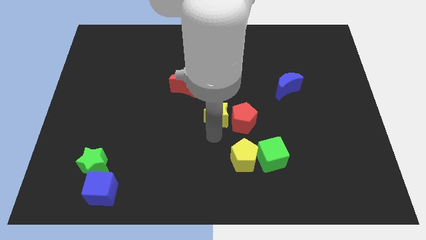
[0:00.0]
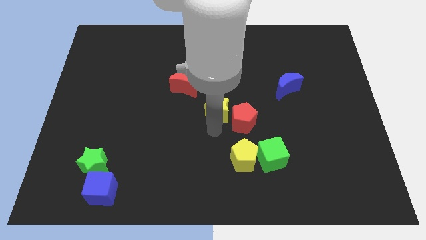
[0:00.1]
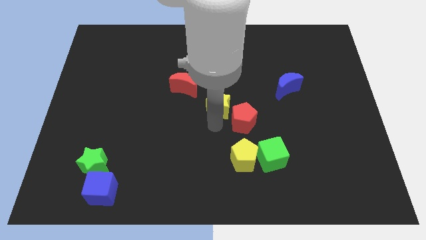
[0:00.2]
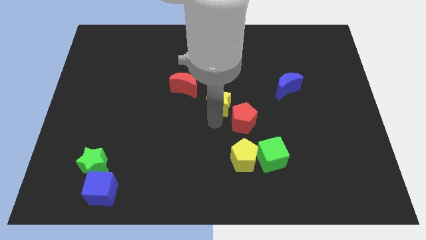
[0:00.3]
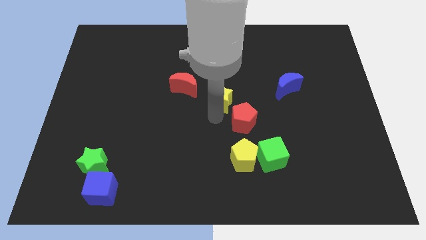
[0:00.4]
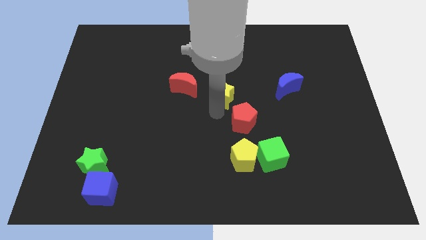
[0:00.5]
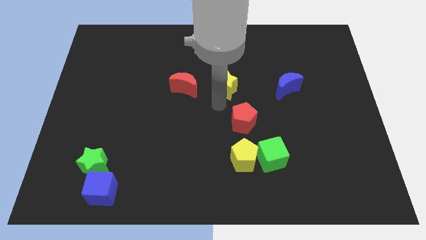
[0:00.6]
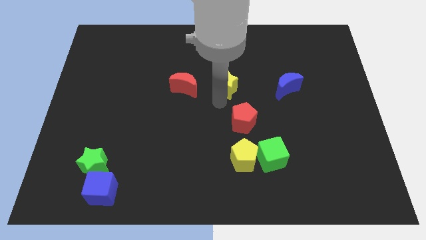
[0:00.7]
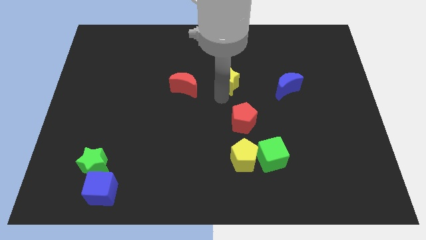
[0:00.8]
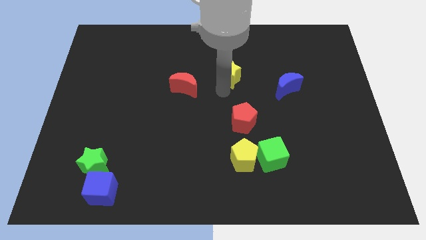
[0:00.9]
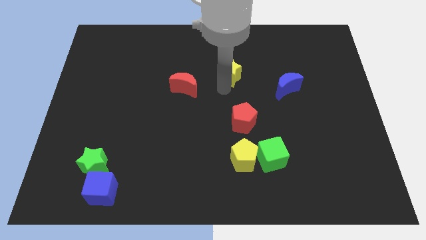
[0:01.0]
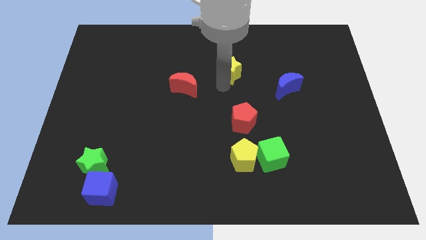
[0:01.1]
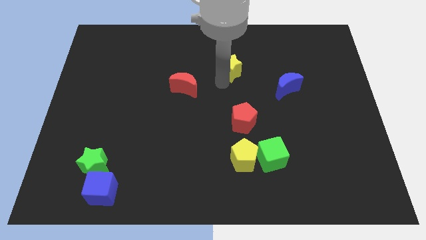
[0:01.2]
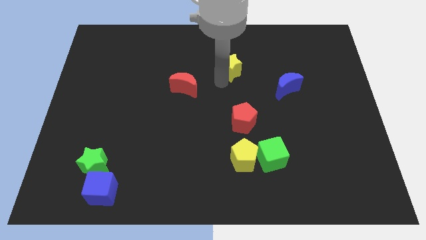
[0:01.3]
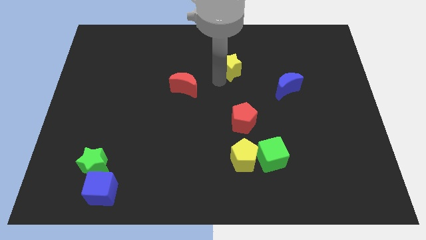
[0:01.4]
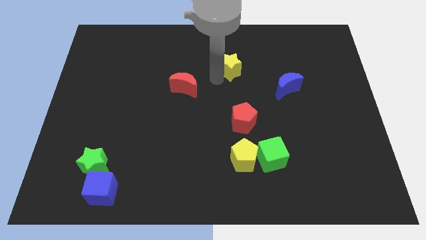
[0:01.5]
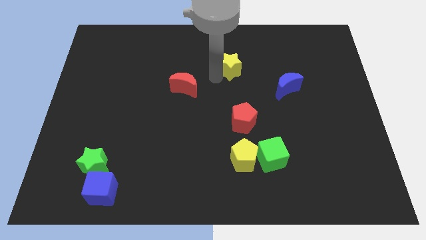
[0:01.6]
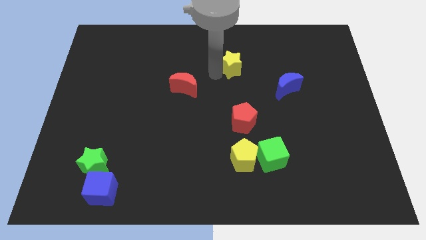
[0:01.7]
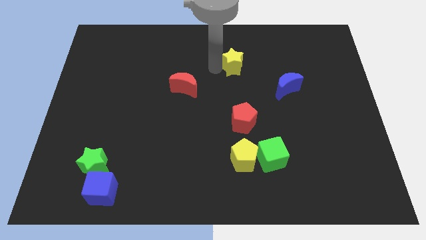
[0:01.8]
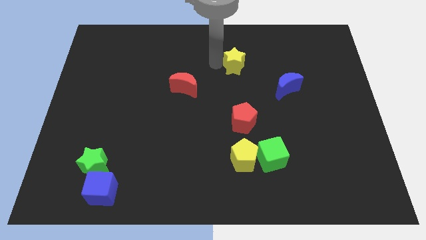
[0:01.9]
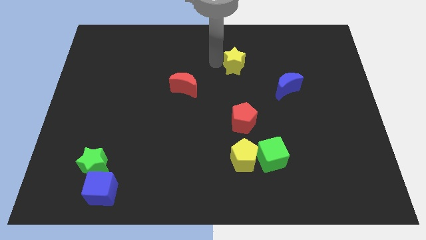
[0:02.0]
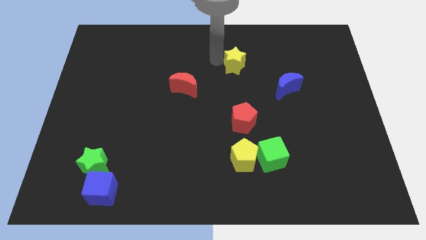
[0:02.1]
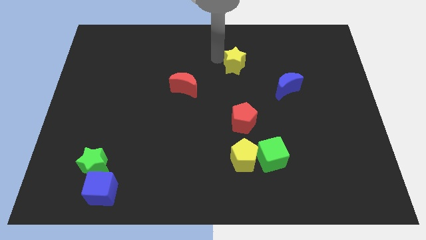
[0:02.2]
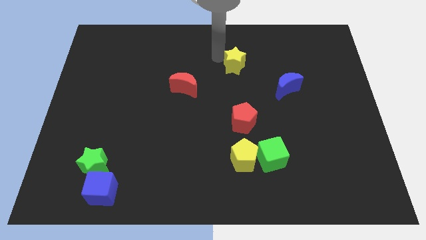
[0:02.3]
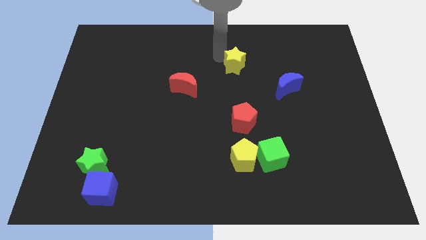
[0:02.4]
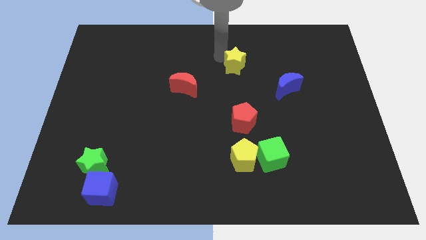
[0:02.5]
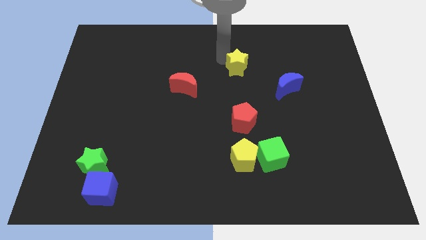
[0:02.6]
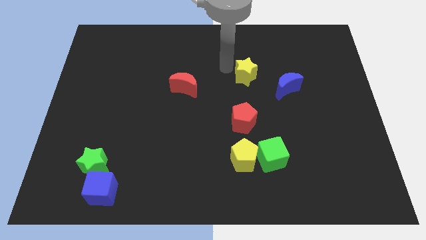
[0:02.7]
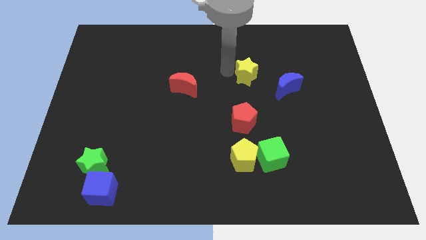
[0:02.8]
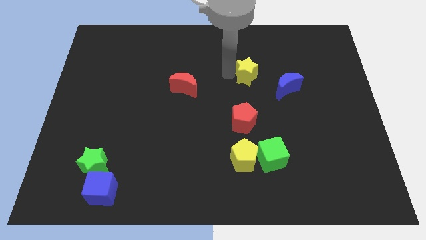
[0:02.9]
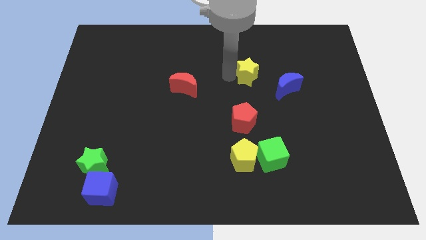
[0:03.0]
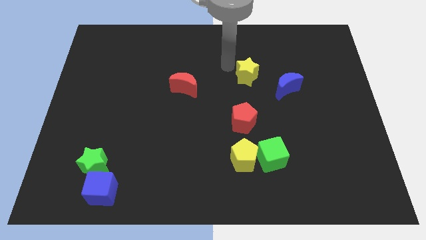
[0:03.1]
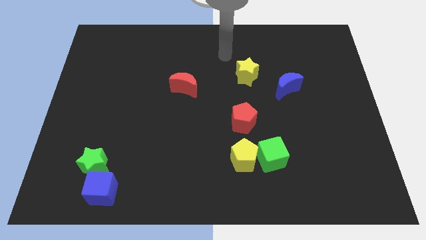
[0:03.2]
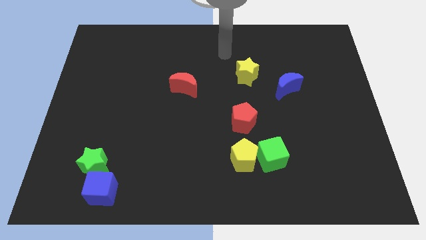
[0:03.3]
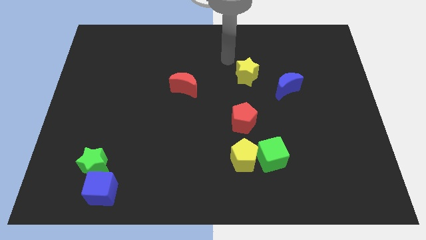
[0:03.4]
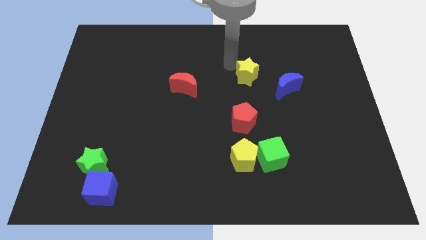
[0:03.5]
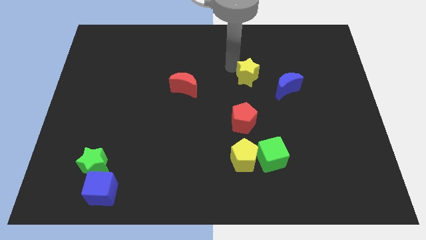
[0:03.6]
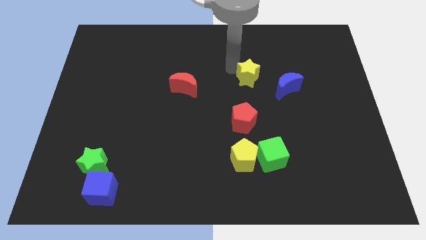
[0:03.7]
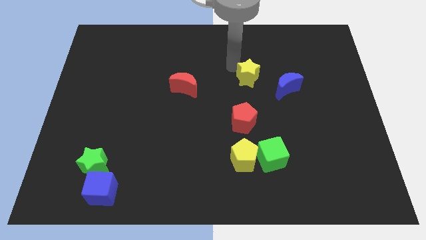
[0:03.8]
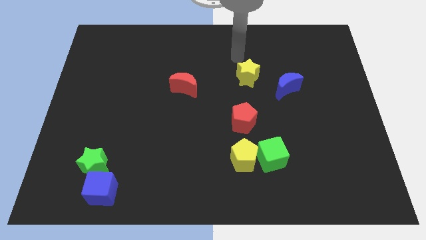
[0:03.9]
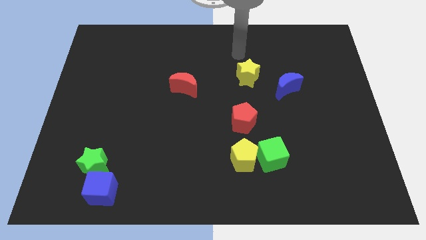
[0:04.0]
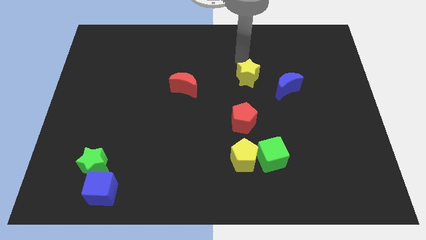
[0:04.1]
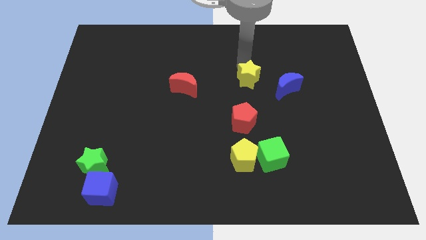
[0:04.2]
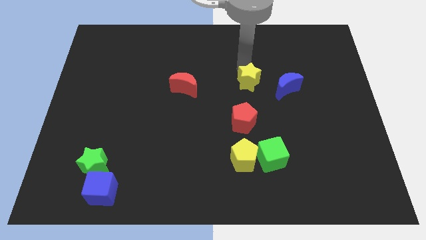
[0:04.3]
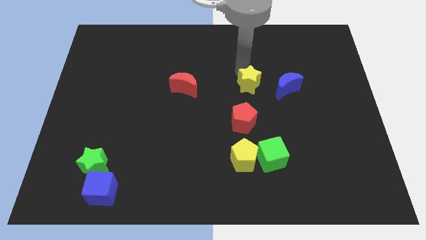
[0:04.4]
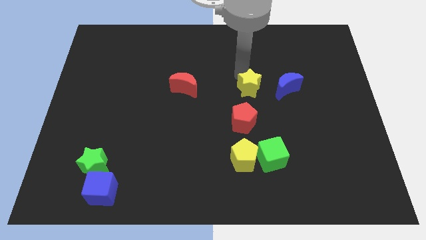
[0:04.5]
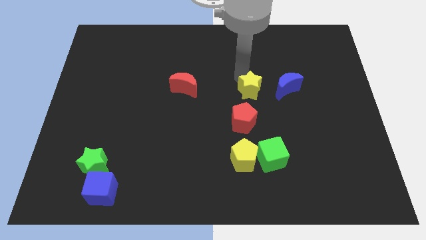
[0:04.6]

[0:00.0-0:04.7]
move the yellow star to the left of the blue crescent

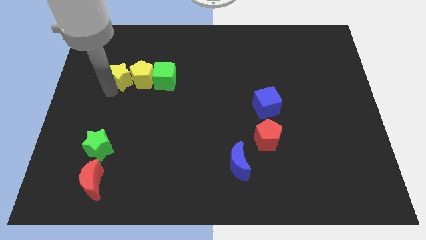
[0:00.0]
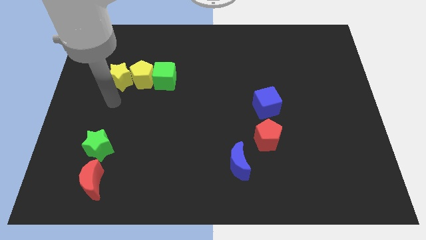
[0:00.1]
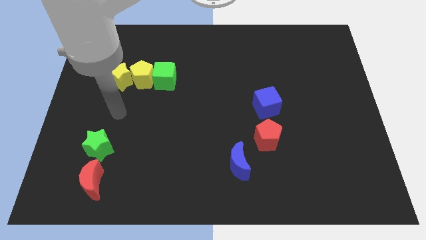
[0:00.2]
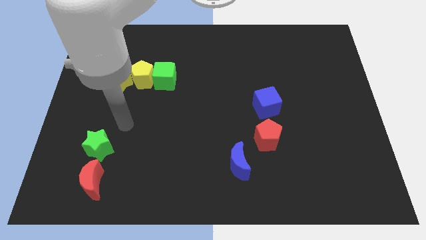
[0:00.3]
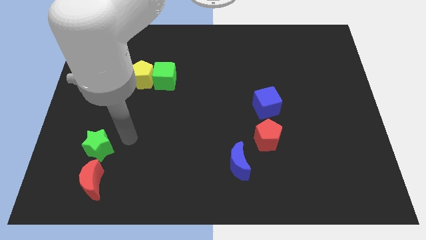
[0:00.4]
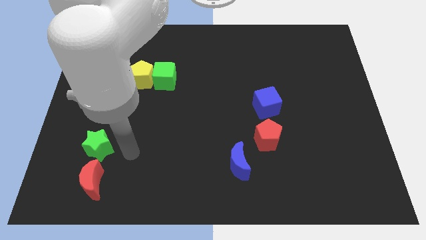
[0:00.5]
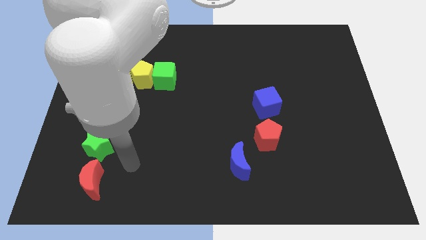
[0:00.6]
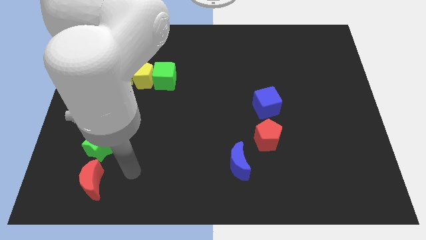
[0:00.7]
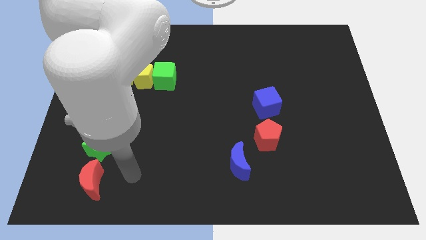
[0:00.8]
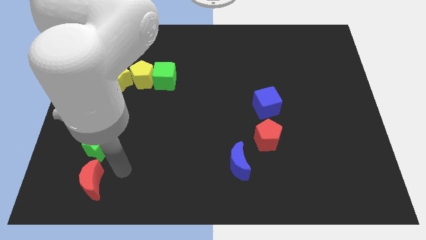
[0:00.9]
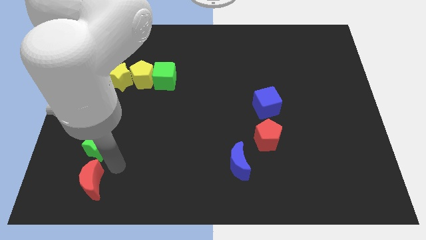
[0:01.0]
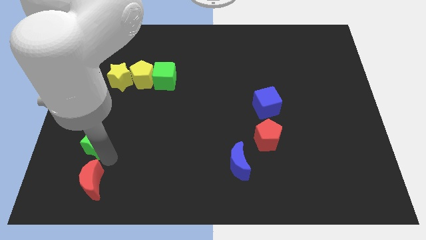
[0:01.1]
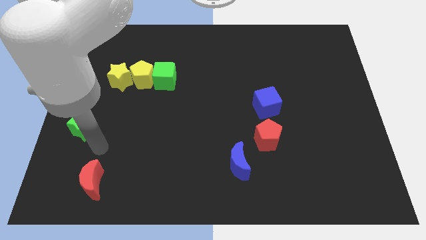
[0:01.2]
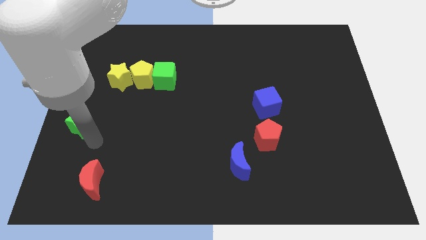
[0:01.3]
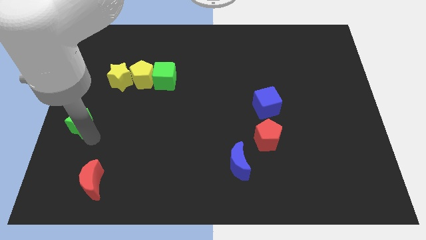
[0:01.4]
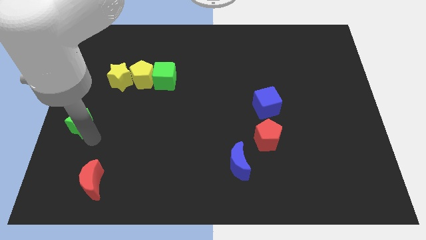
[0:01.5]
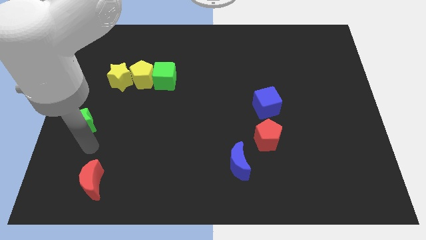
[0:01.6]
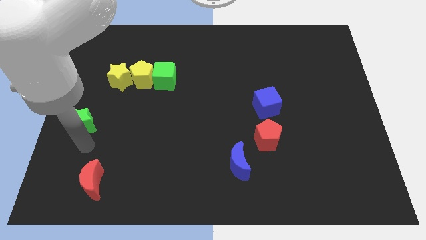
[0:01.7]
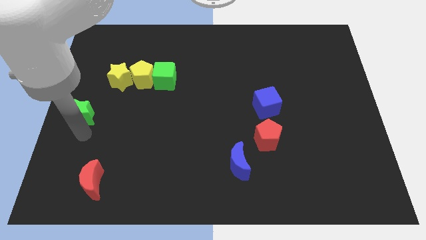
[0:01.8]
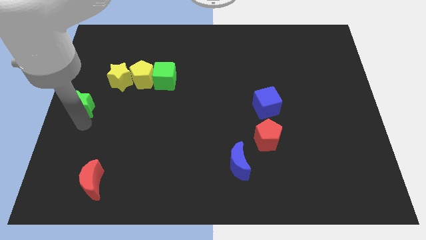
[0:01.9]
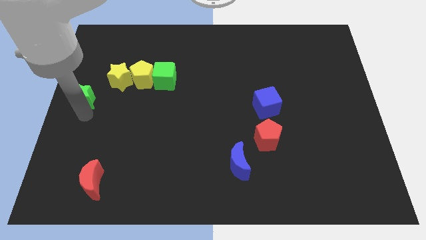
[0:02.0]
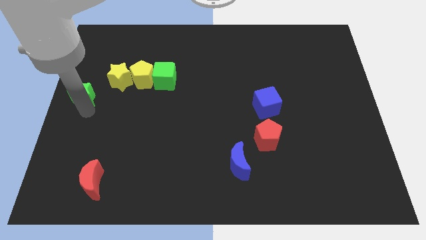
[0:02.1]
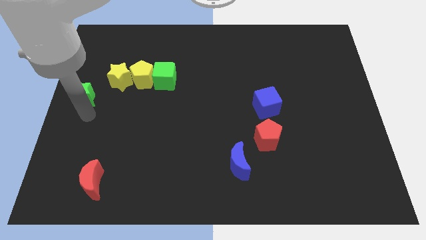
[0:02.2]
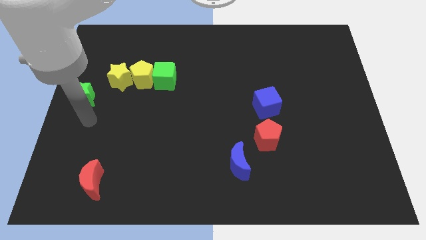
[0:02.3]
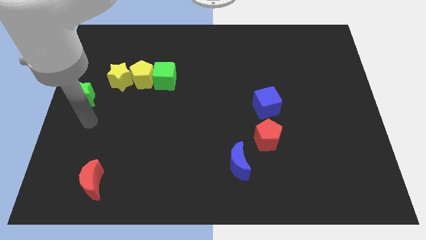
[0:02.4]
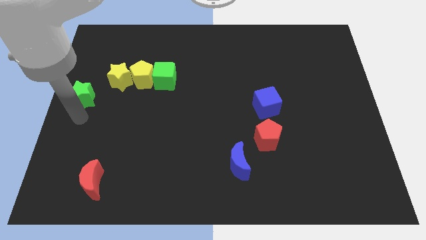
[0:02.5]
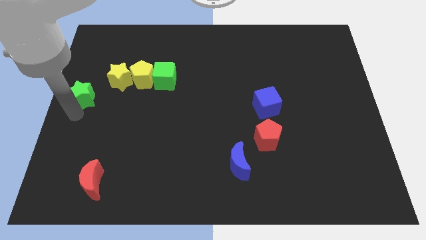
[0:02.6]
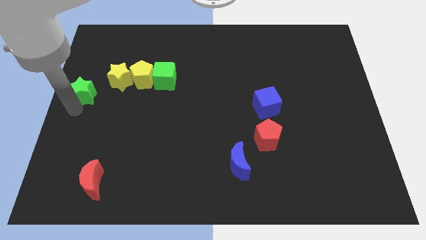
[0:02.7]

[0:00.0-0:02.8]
push the green star to the top left center

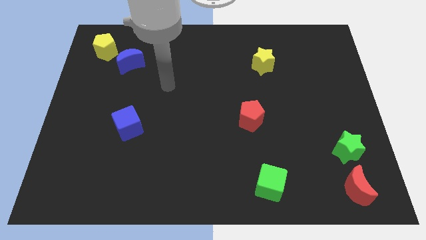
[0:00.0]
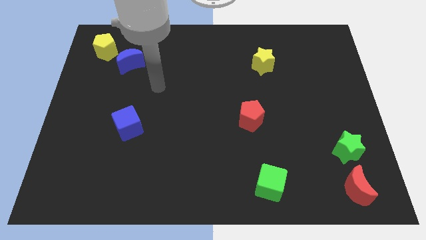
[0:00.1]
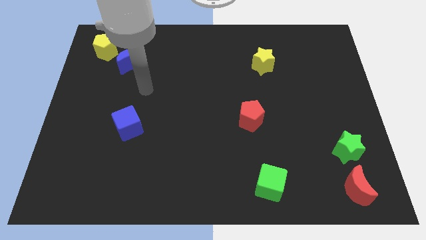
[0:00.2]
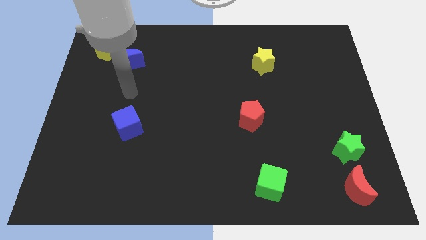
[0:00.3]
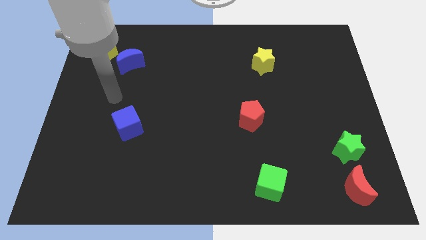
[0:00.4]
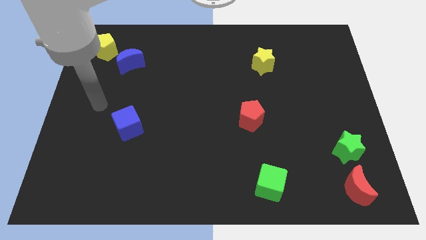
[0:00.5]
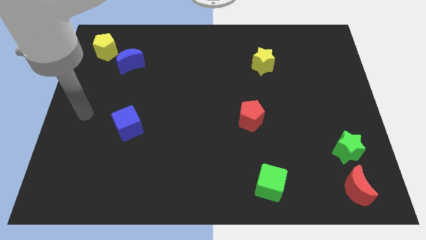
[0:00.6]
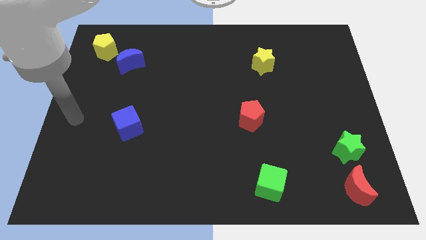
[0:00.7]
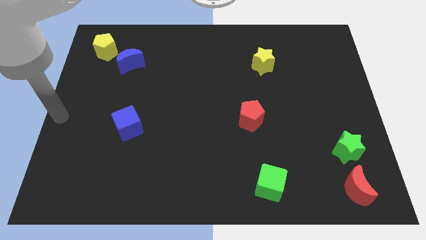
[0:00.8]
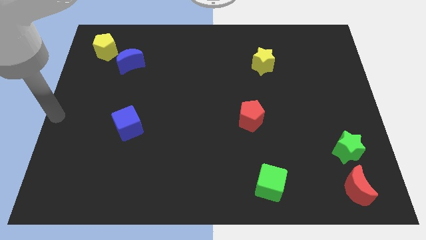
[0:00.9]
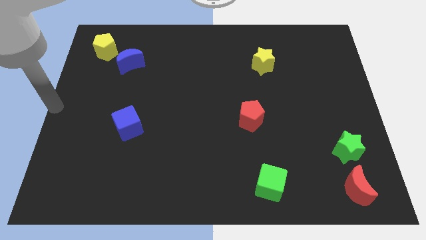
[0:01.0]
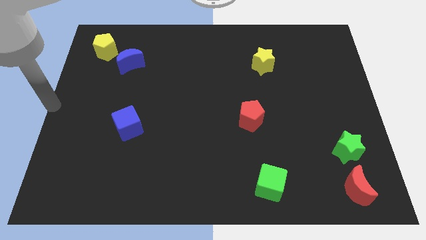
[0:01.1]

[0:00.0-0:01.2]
place arm in the center left of board
